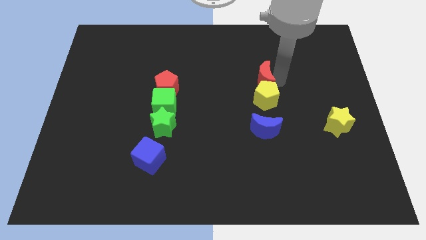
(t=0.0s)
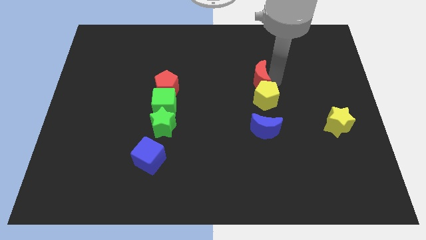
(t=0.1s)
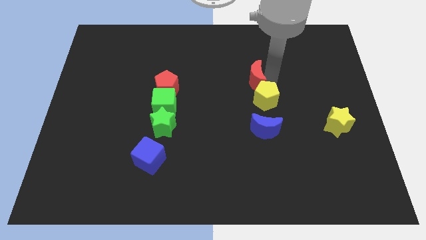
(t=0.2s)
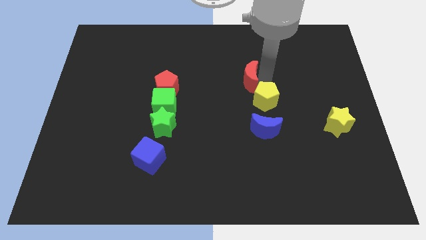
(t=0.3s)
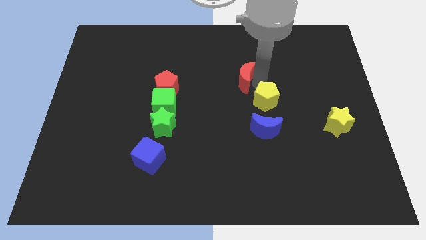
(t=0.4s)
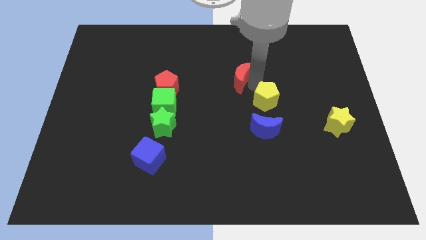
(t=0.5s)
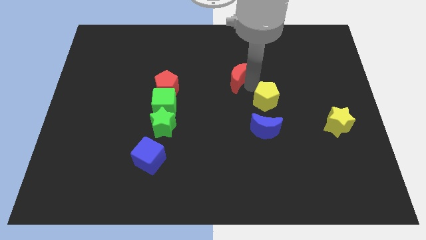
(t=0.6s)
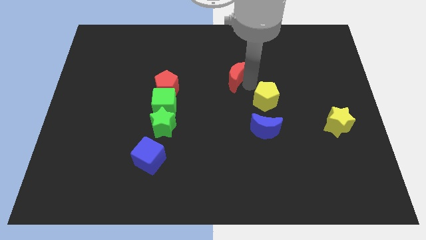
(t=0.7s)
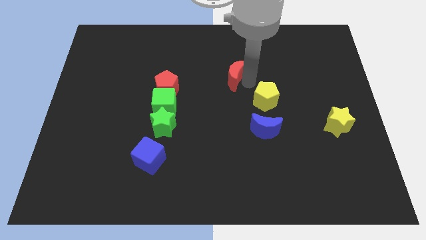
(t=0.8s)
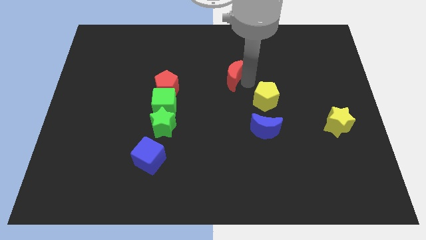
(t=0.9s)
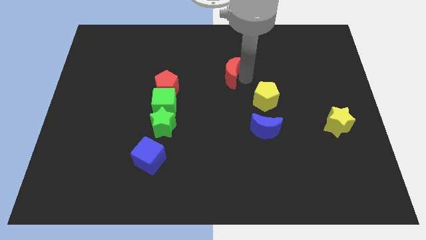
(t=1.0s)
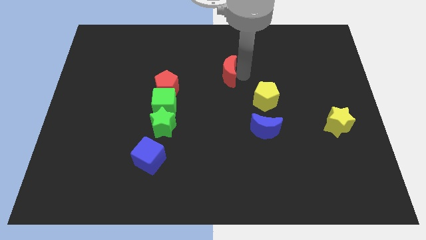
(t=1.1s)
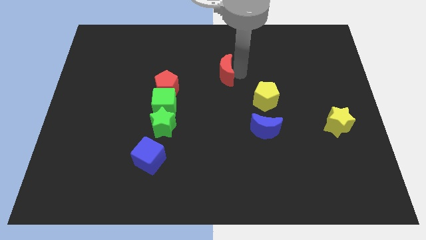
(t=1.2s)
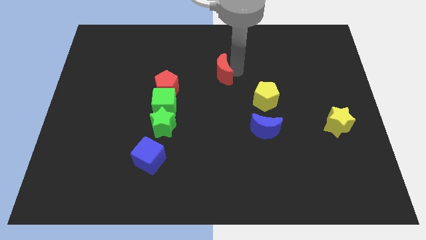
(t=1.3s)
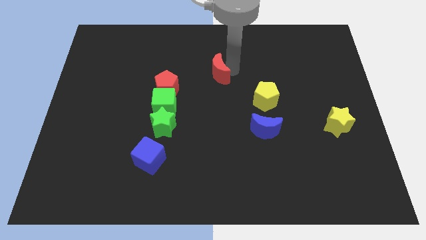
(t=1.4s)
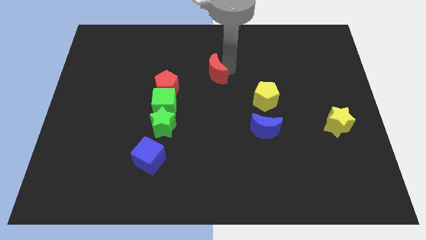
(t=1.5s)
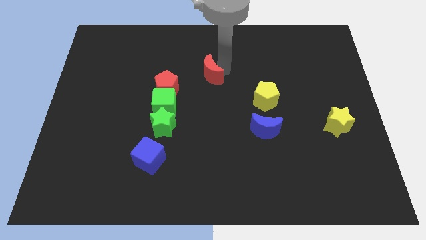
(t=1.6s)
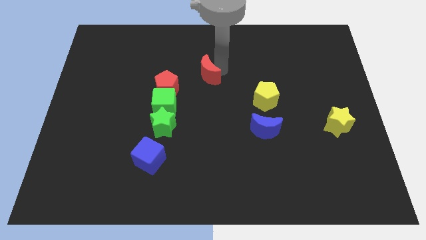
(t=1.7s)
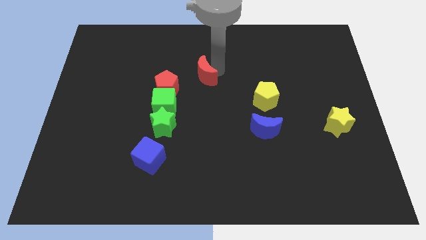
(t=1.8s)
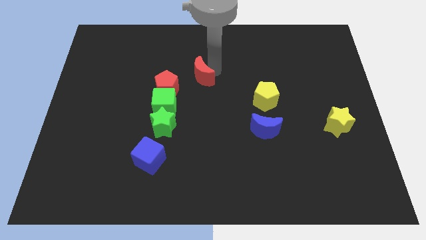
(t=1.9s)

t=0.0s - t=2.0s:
move red crescent diagonally top left to the yellow pentagon

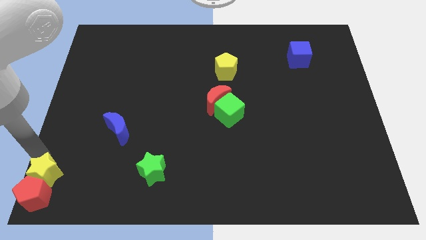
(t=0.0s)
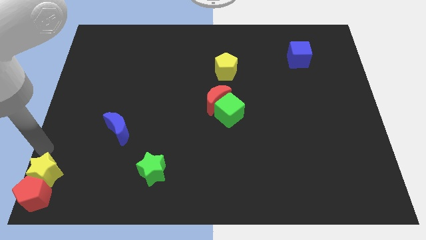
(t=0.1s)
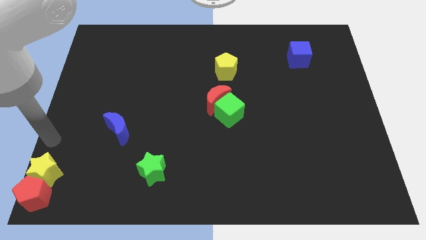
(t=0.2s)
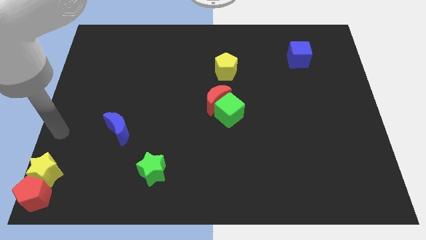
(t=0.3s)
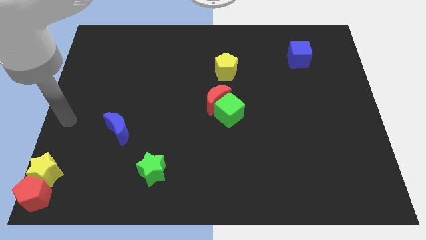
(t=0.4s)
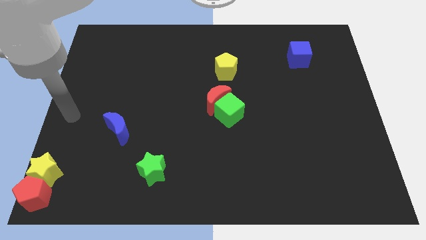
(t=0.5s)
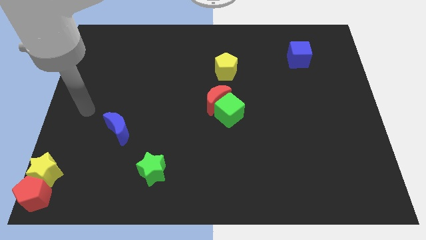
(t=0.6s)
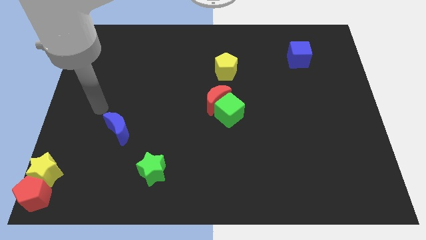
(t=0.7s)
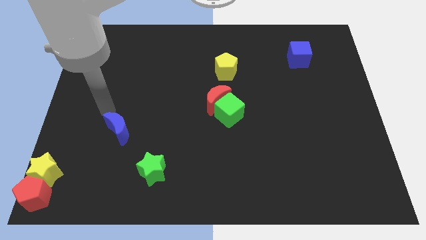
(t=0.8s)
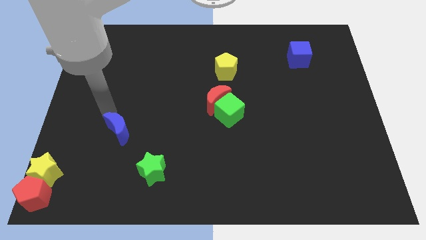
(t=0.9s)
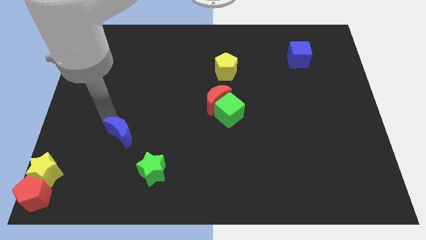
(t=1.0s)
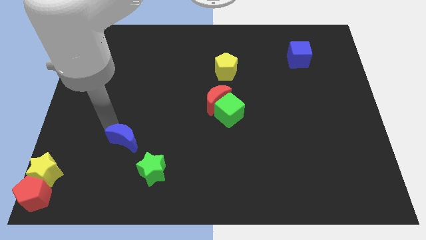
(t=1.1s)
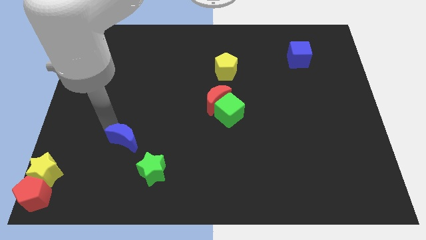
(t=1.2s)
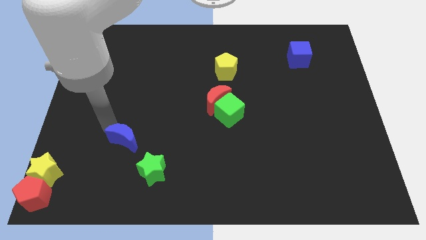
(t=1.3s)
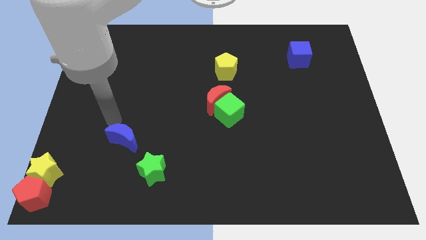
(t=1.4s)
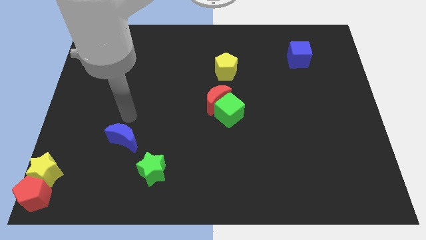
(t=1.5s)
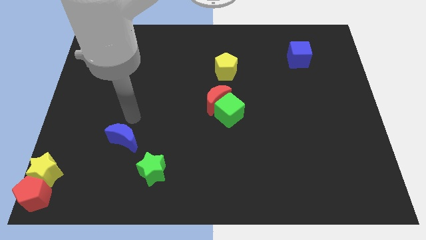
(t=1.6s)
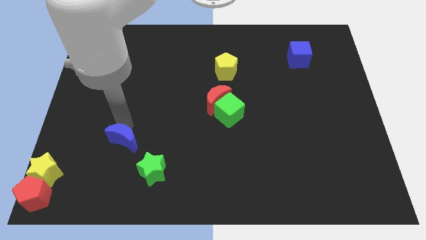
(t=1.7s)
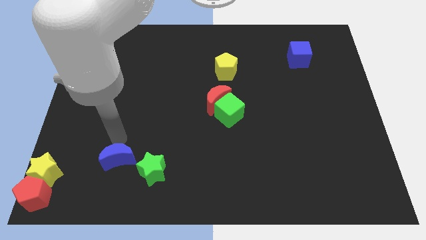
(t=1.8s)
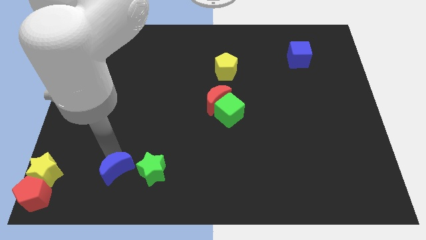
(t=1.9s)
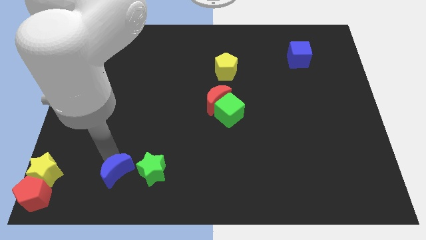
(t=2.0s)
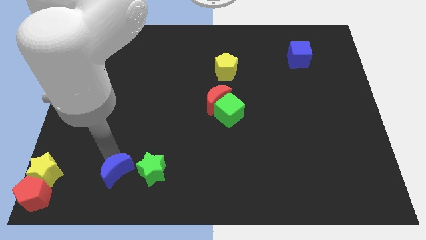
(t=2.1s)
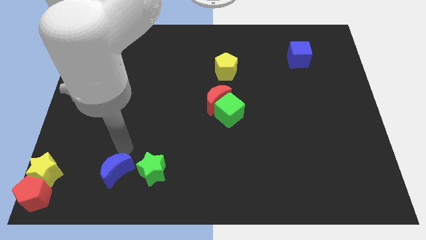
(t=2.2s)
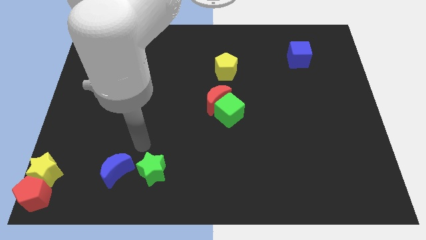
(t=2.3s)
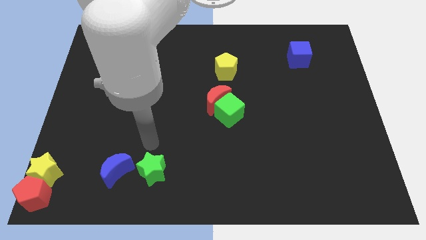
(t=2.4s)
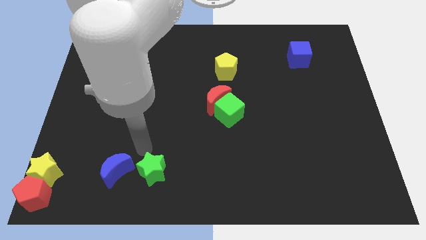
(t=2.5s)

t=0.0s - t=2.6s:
place the blue moon to the left side of green star

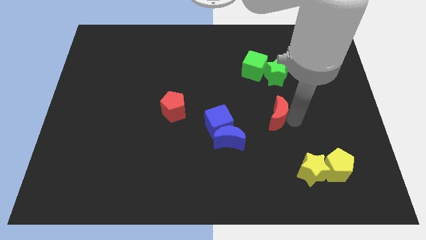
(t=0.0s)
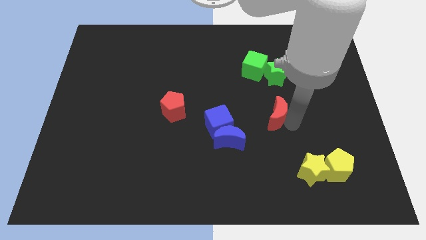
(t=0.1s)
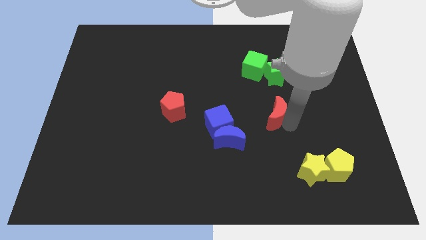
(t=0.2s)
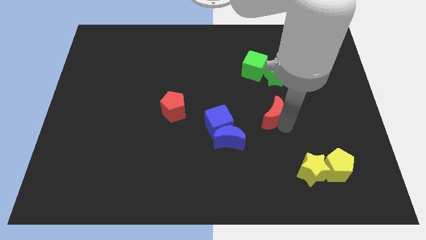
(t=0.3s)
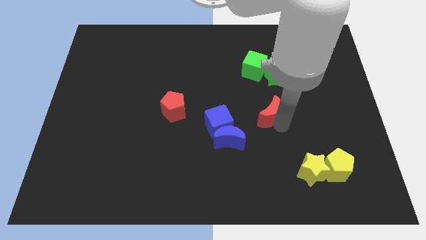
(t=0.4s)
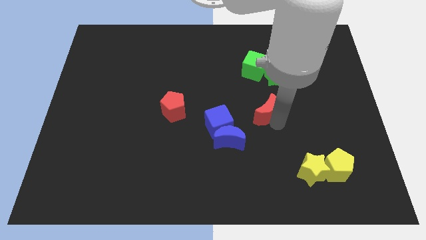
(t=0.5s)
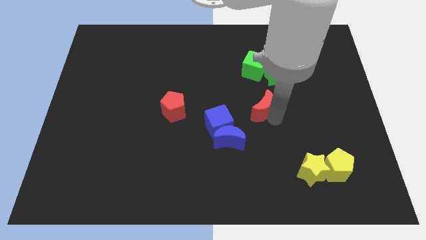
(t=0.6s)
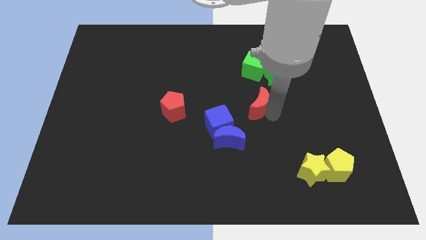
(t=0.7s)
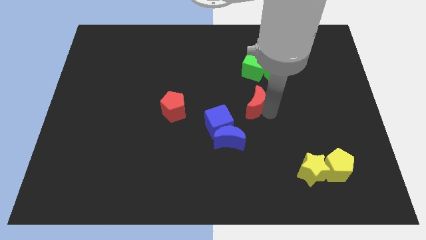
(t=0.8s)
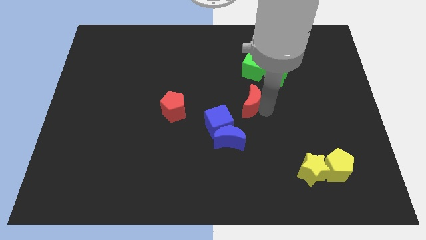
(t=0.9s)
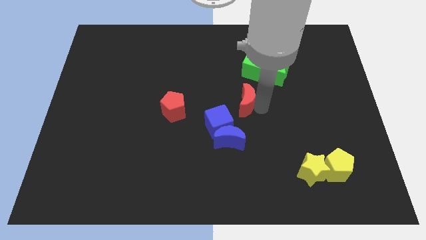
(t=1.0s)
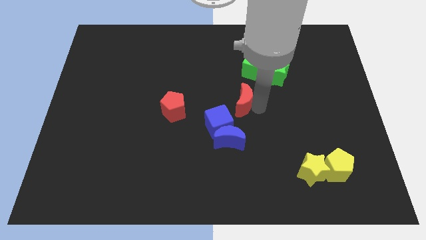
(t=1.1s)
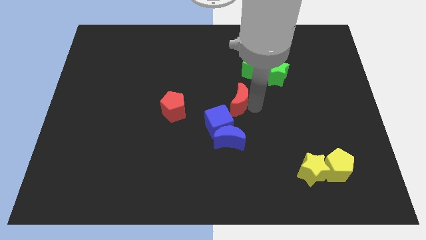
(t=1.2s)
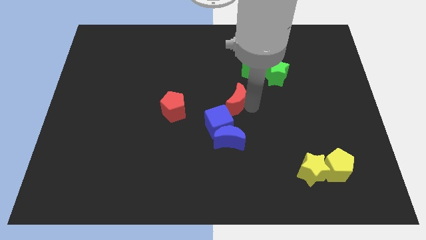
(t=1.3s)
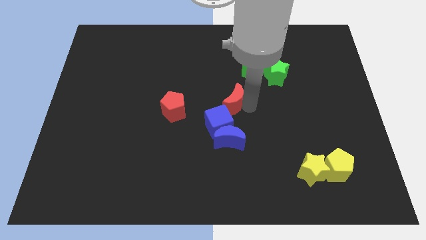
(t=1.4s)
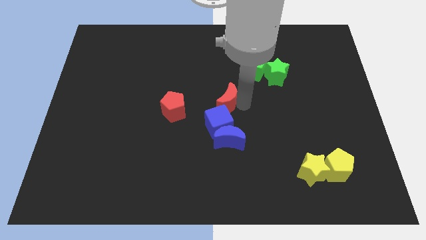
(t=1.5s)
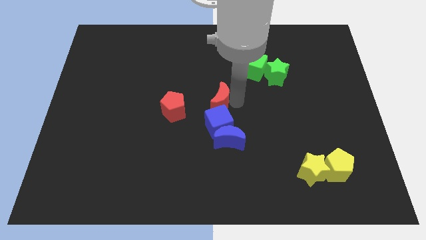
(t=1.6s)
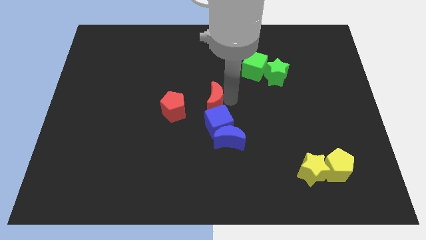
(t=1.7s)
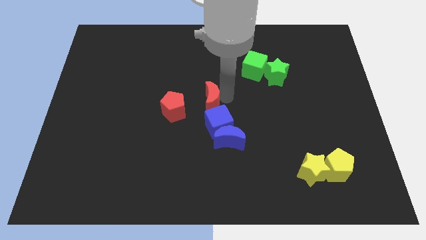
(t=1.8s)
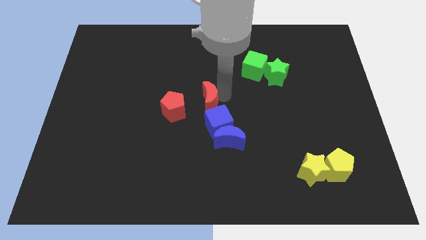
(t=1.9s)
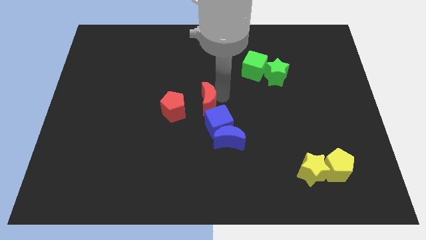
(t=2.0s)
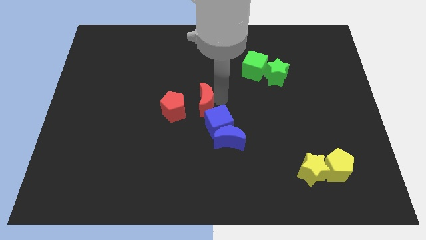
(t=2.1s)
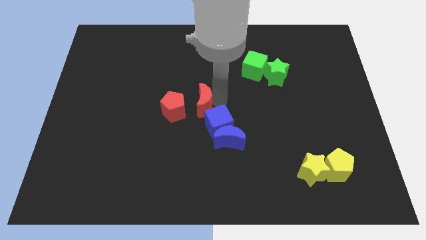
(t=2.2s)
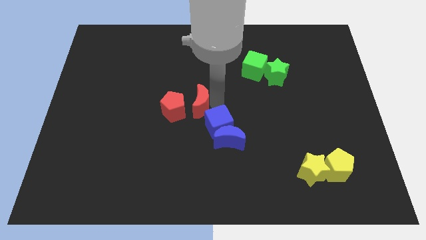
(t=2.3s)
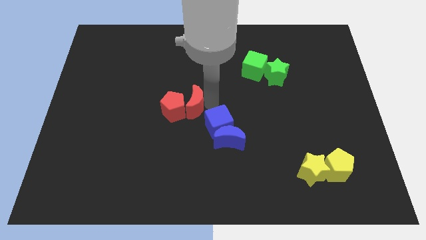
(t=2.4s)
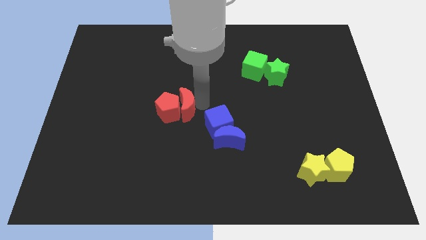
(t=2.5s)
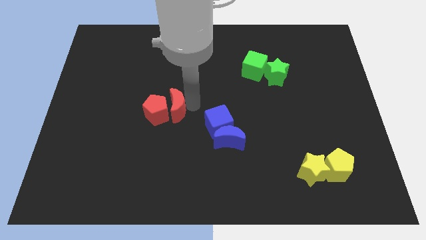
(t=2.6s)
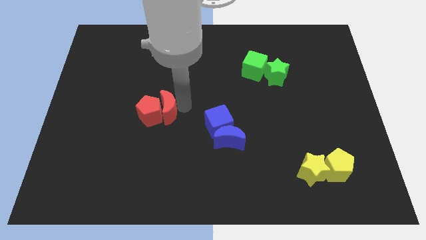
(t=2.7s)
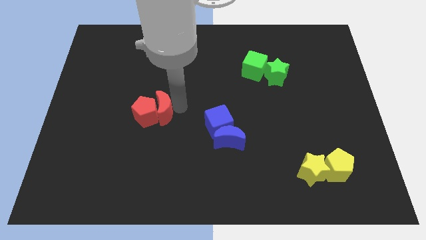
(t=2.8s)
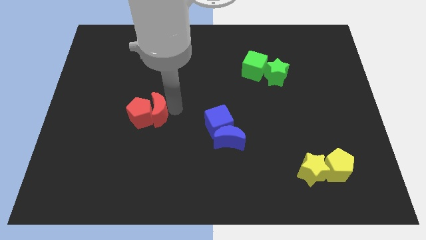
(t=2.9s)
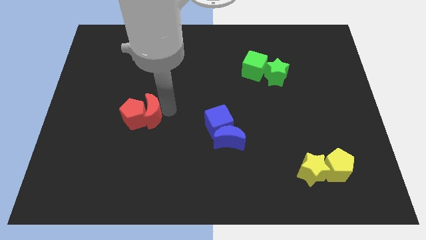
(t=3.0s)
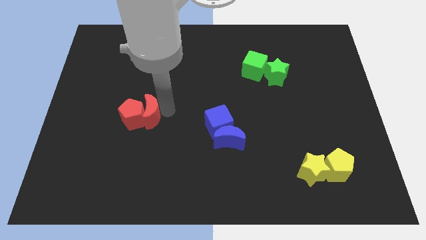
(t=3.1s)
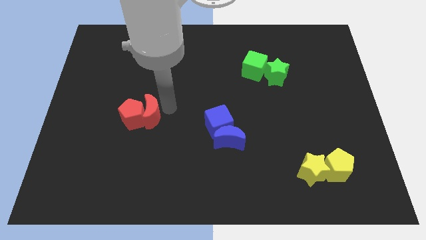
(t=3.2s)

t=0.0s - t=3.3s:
move the red crescent to the right of the red pentagon

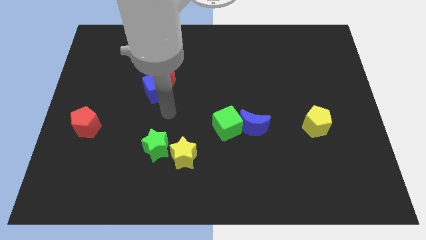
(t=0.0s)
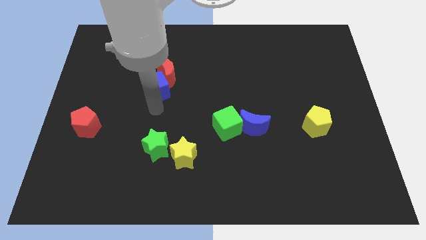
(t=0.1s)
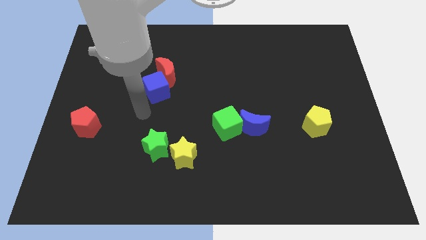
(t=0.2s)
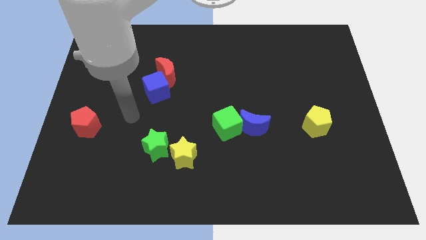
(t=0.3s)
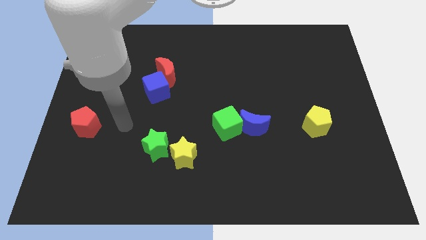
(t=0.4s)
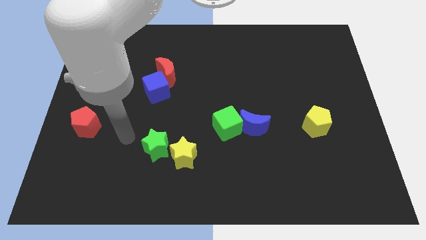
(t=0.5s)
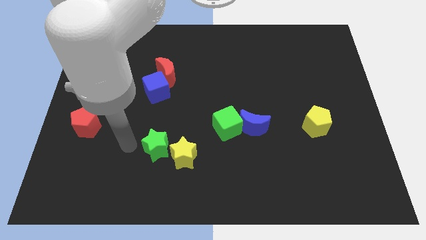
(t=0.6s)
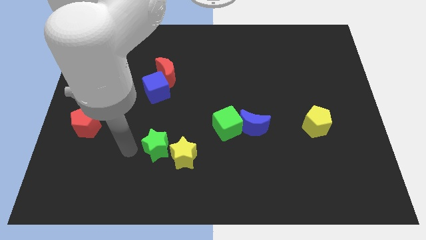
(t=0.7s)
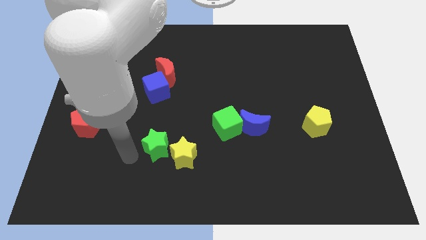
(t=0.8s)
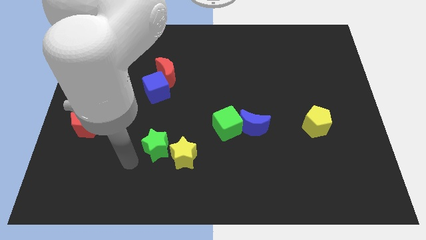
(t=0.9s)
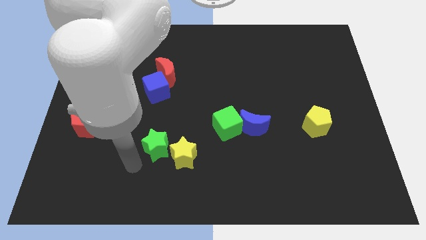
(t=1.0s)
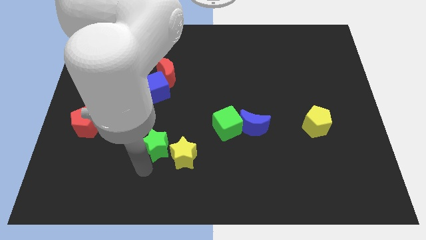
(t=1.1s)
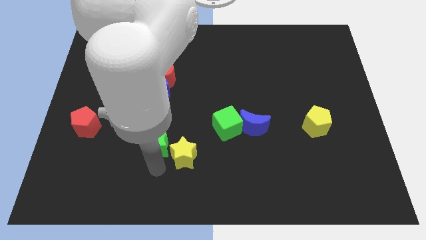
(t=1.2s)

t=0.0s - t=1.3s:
place the arm below the green star
